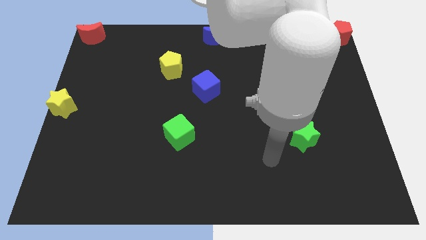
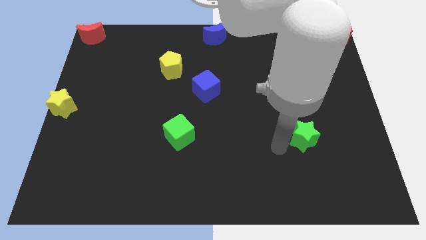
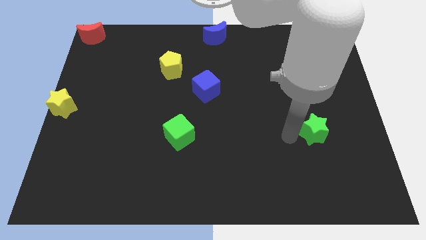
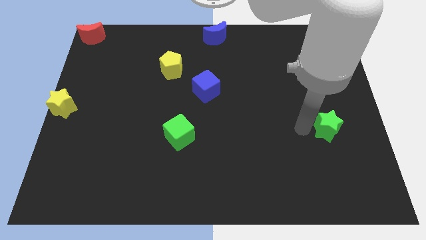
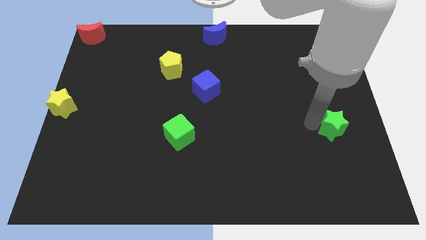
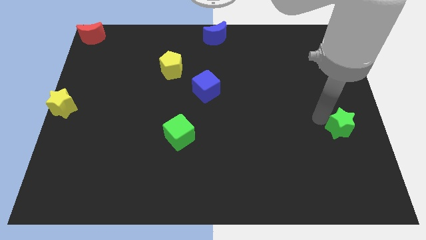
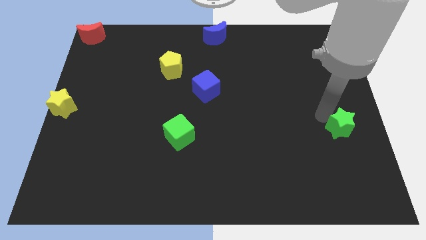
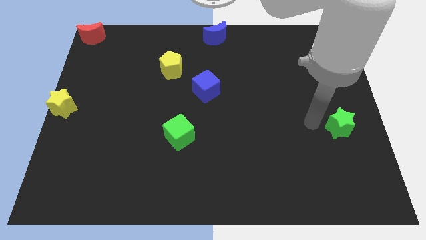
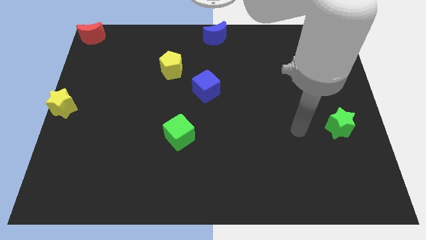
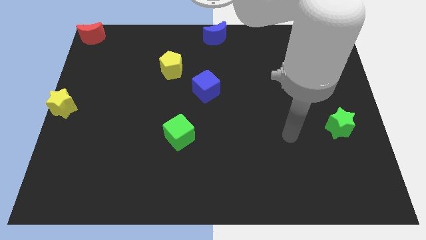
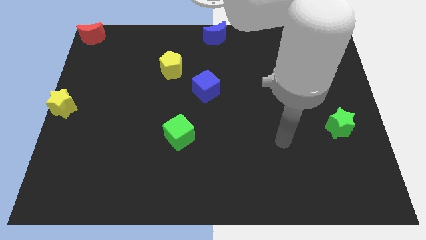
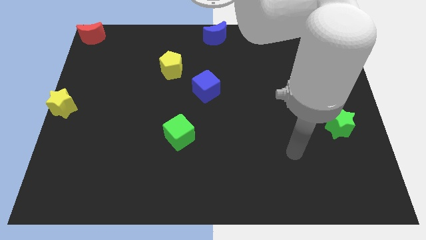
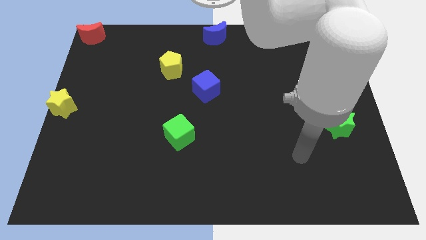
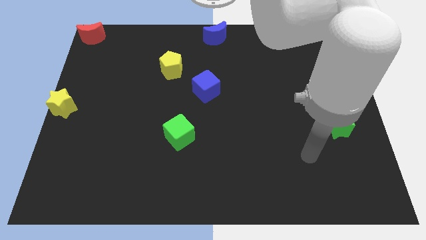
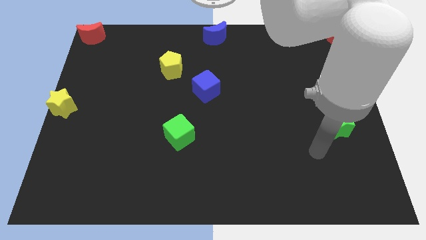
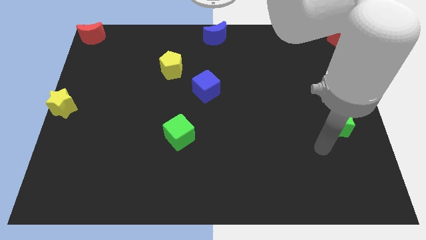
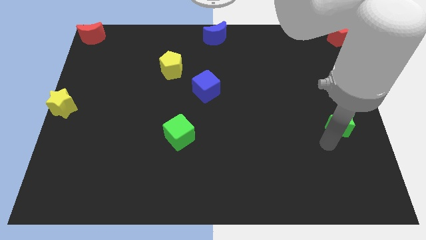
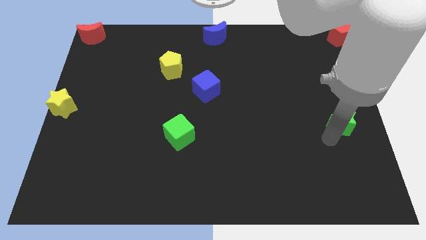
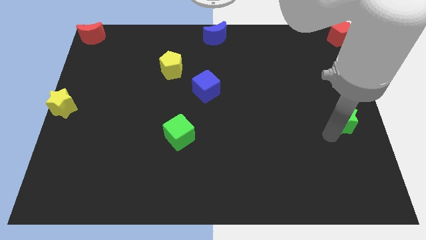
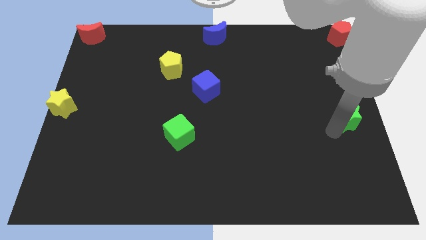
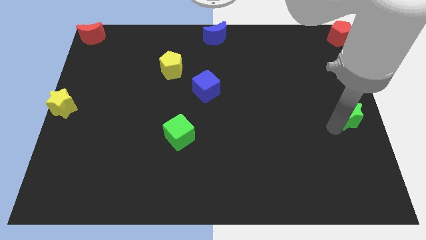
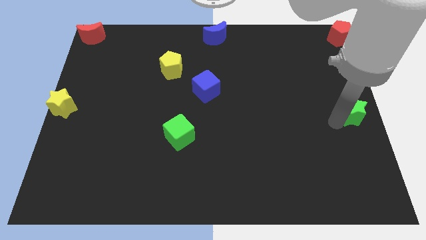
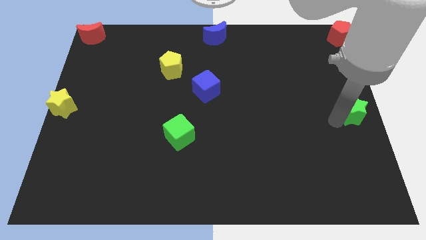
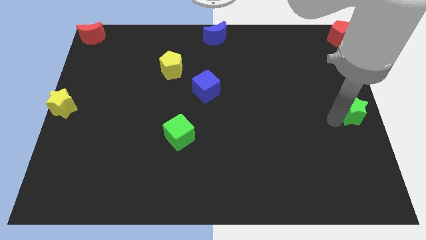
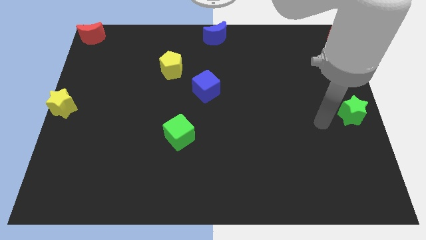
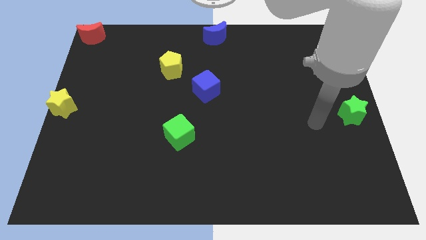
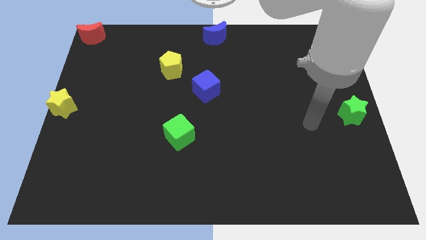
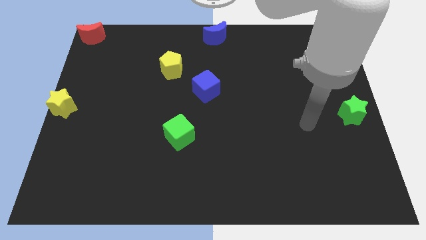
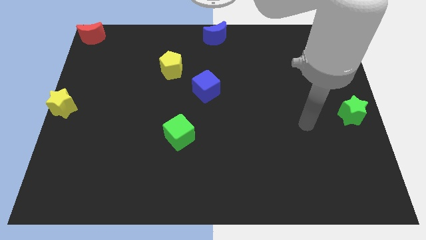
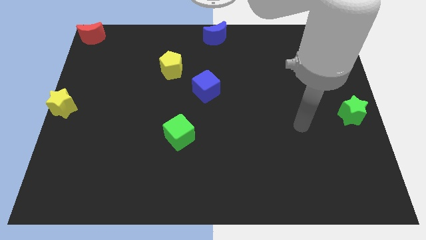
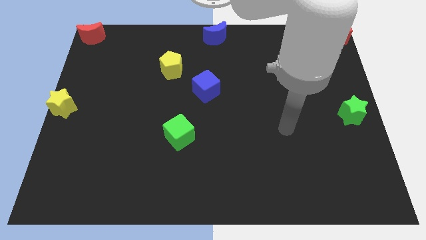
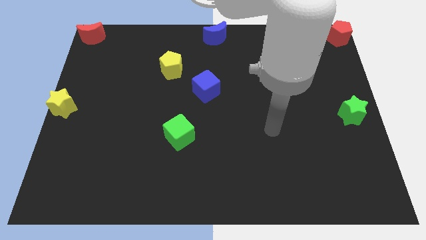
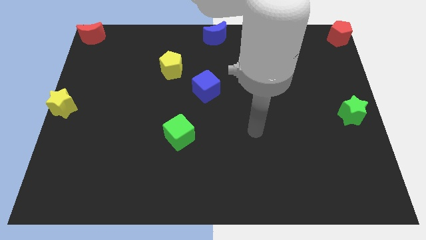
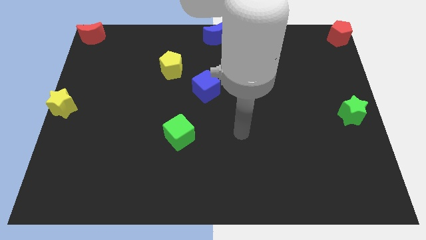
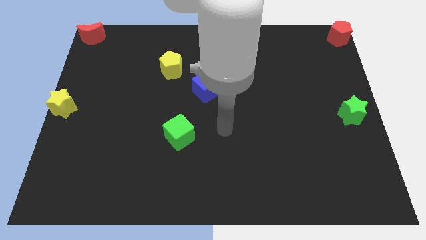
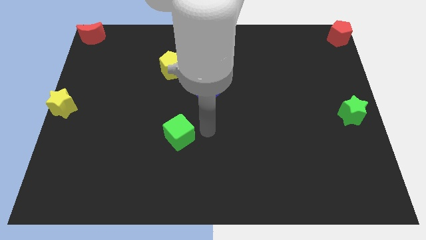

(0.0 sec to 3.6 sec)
put the green star vertically to the bottom side of the red pentagon

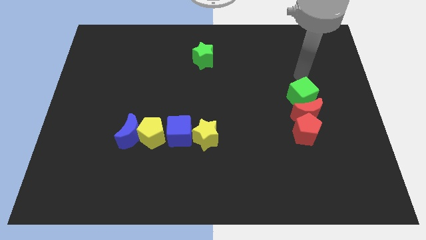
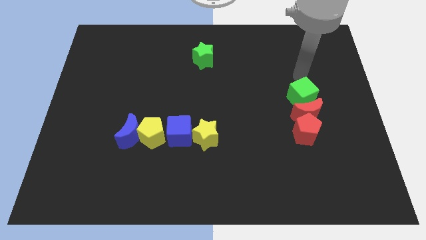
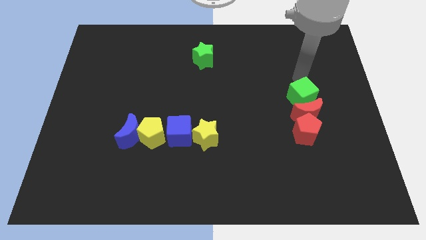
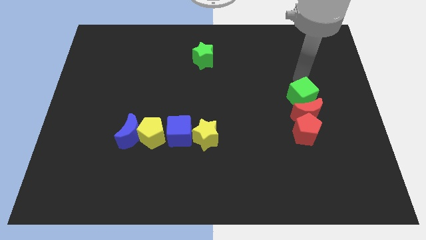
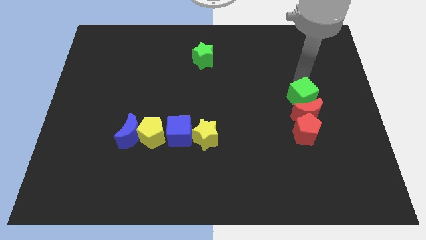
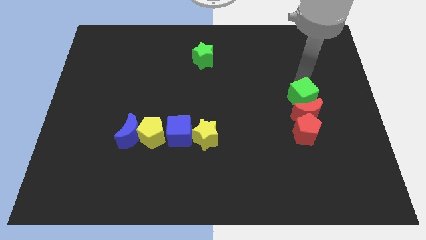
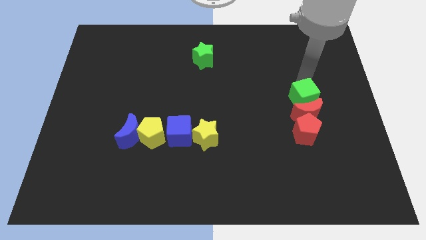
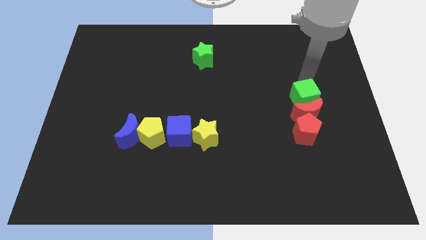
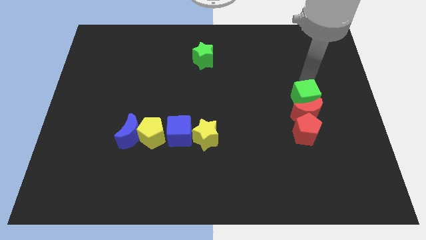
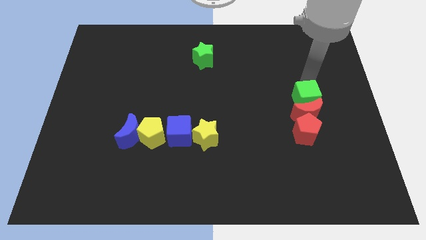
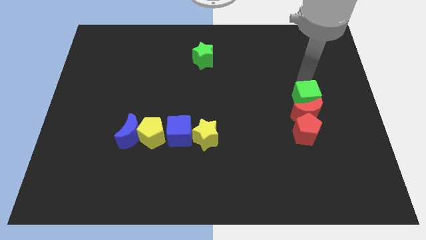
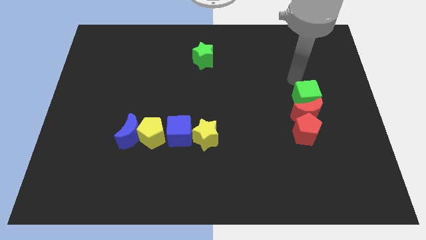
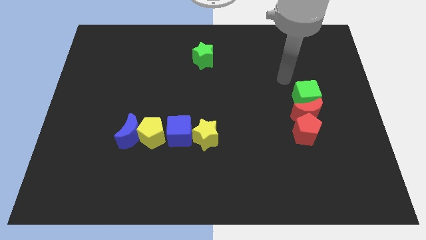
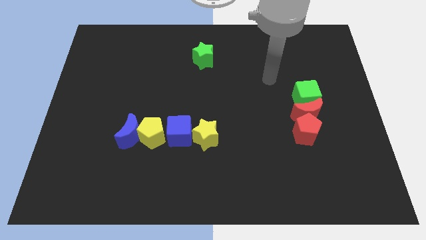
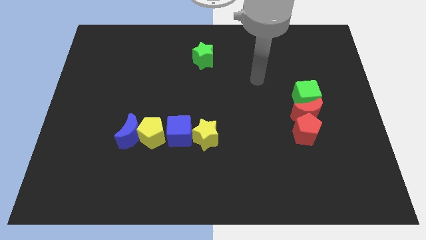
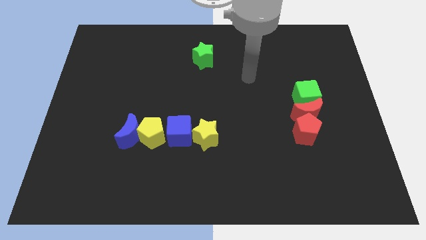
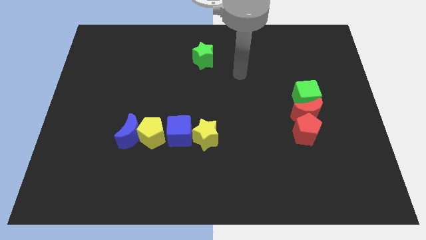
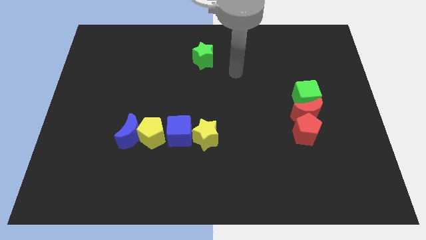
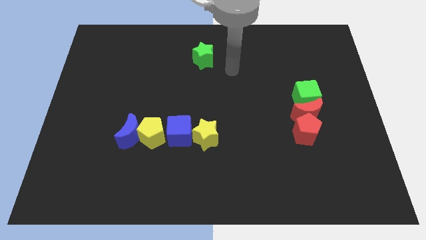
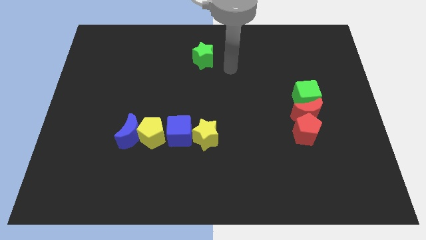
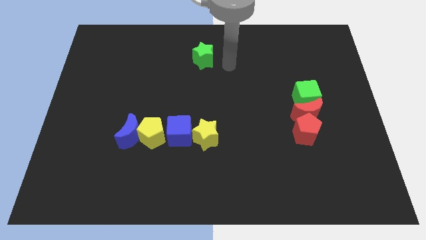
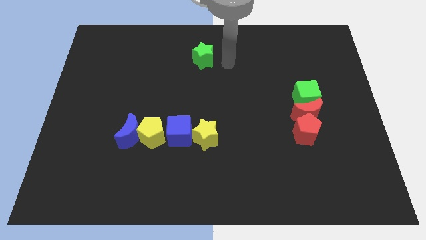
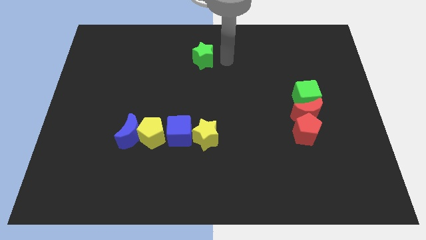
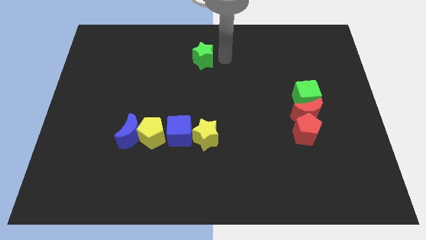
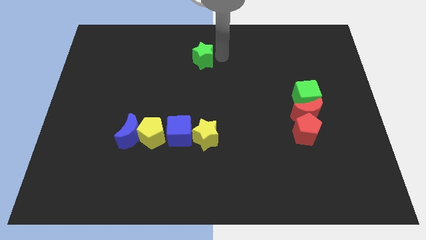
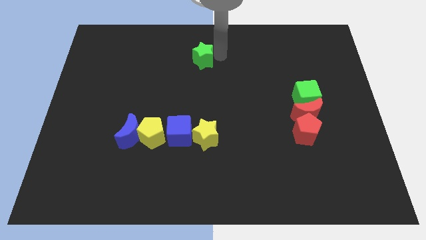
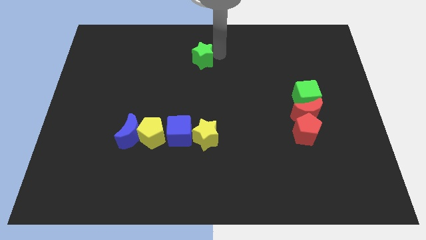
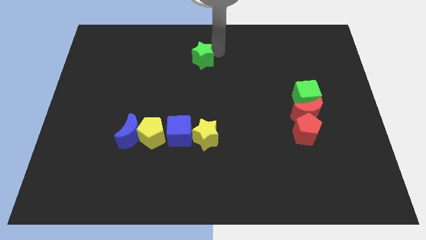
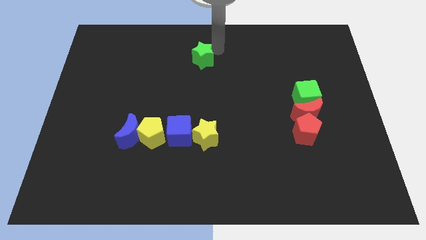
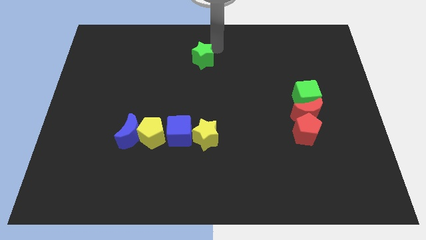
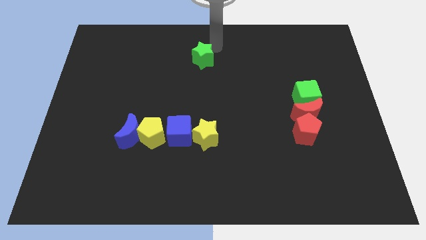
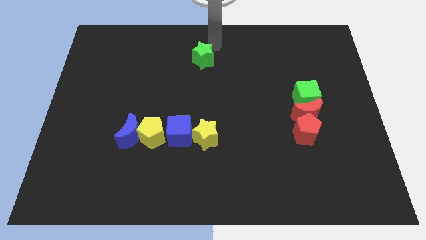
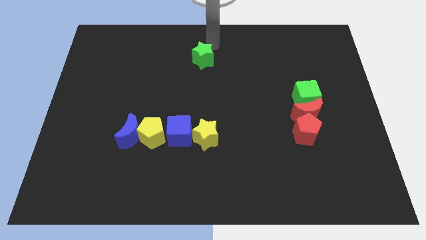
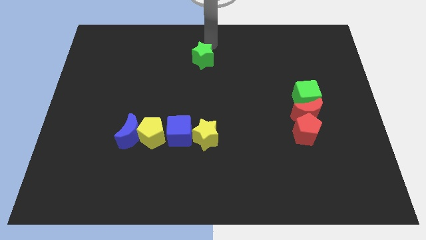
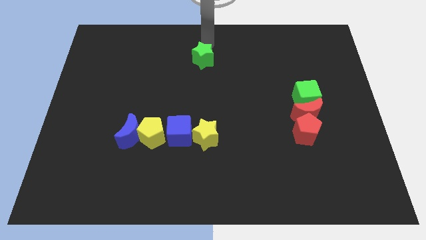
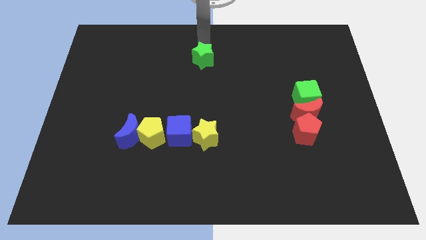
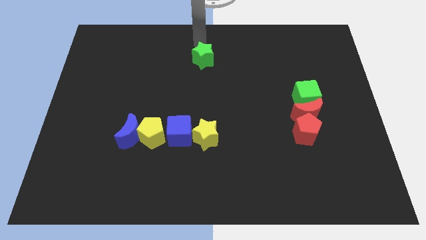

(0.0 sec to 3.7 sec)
place your arm at the top of green star

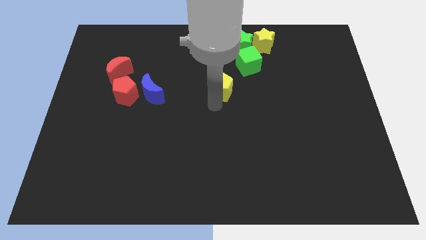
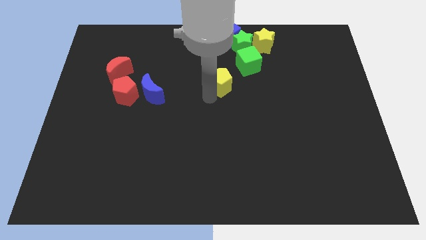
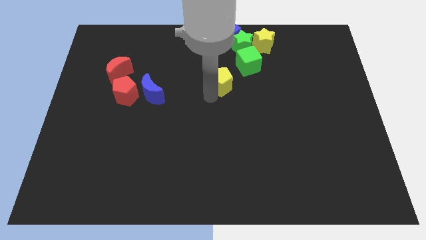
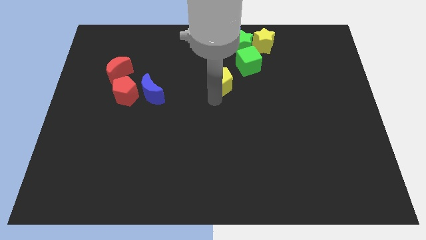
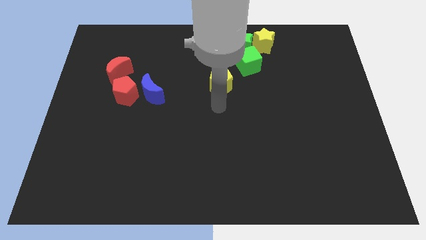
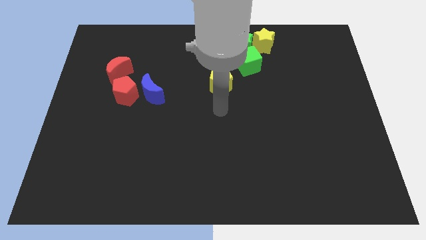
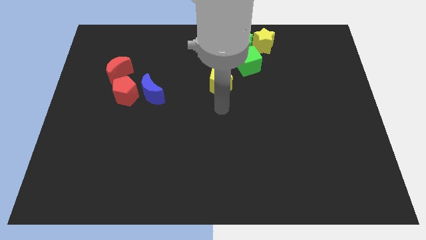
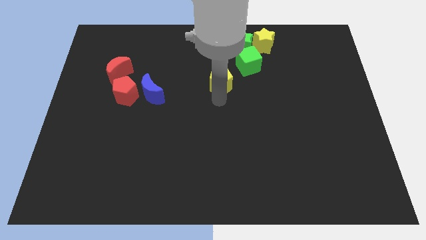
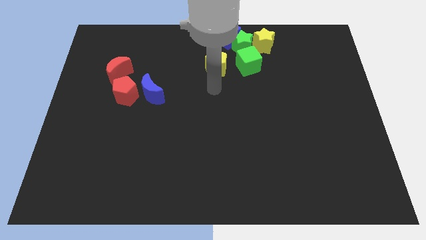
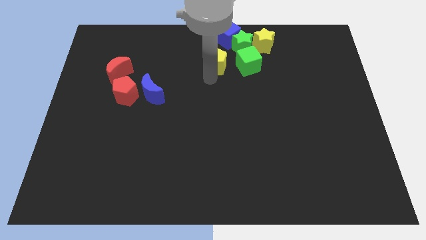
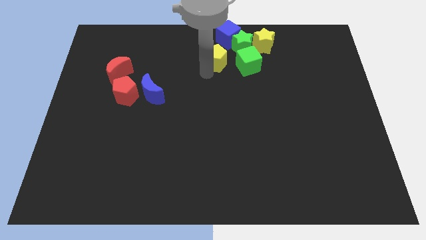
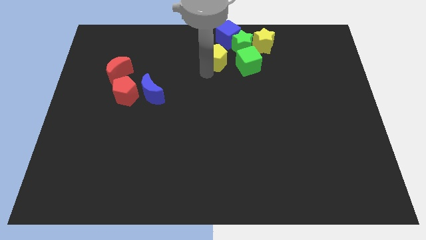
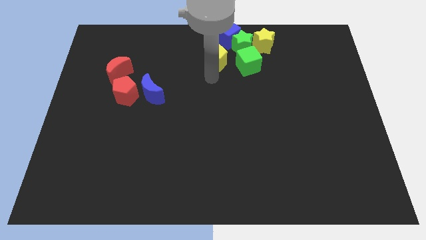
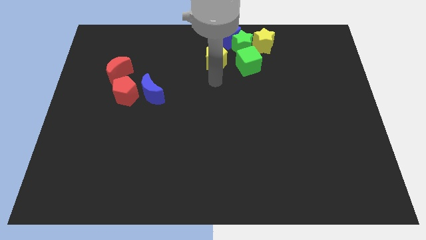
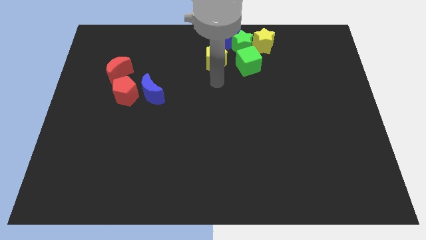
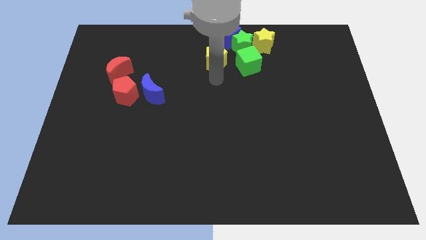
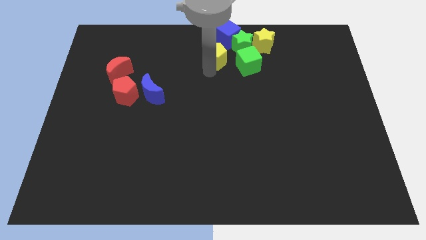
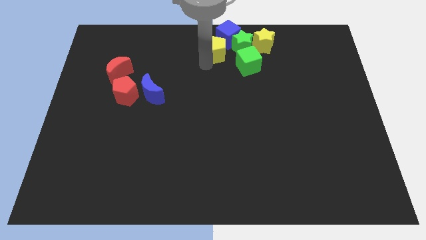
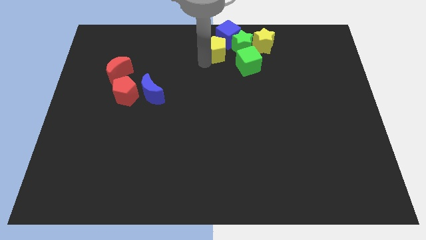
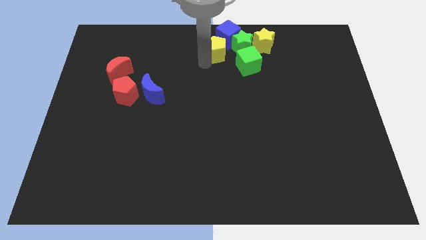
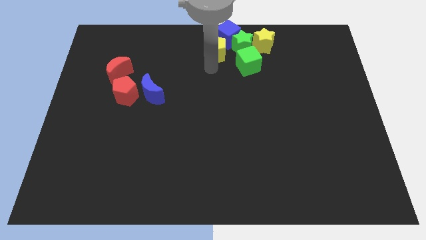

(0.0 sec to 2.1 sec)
push the yellow pentagon towards the top close to the blue cube
